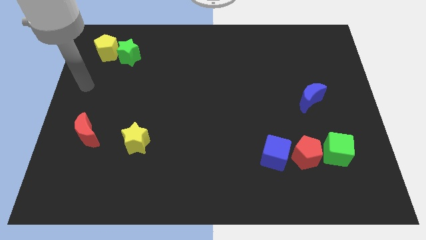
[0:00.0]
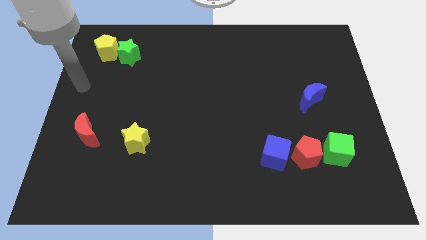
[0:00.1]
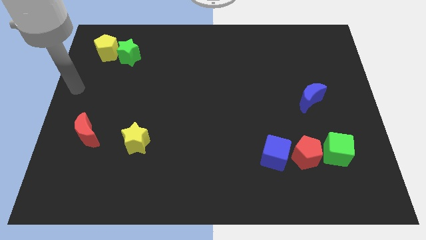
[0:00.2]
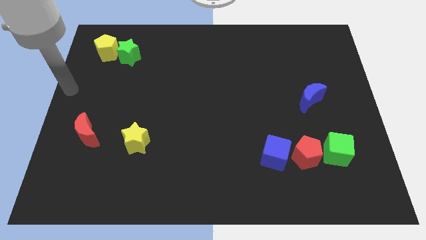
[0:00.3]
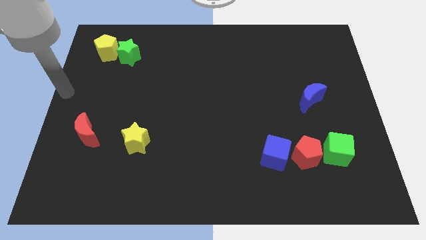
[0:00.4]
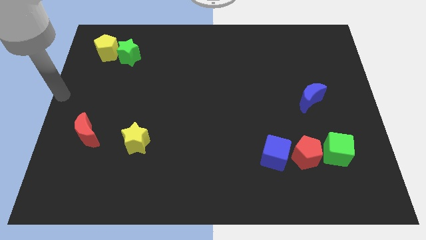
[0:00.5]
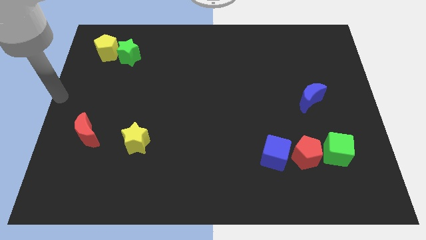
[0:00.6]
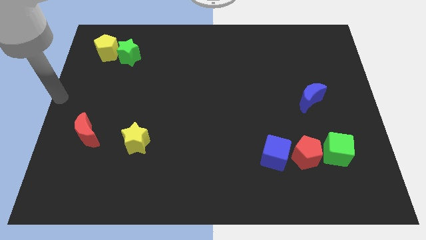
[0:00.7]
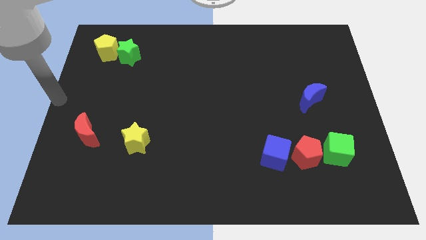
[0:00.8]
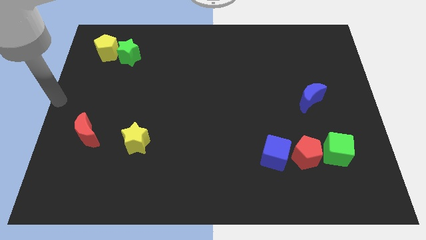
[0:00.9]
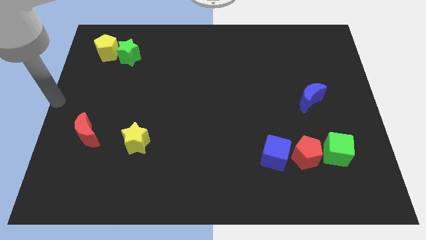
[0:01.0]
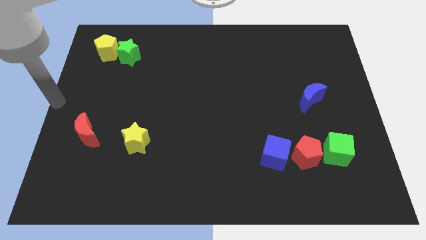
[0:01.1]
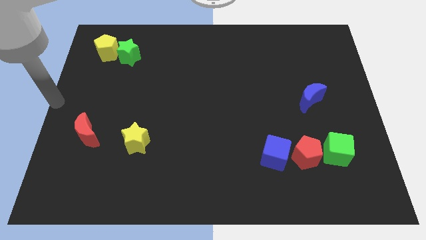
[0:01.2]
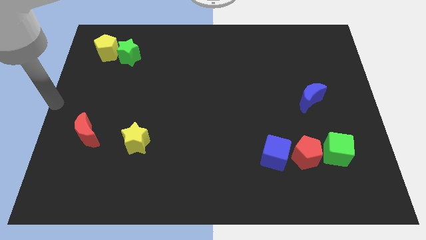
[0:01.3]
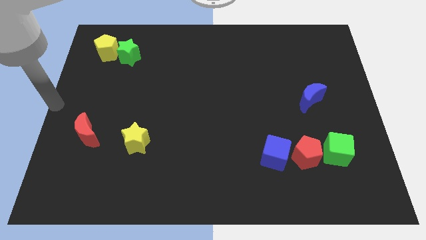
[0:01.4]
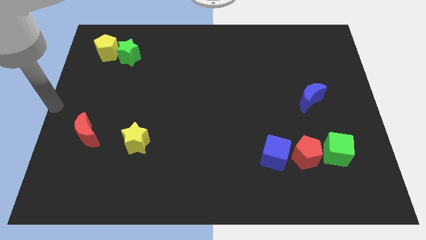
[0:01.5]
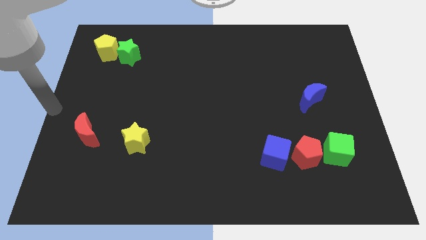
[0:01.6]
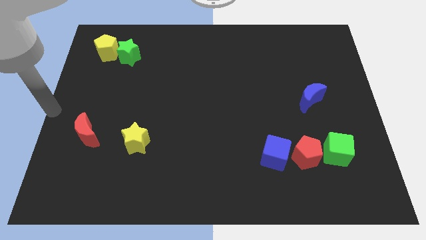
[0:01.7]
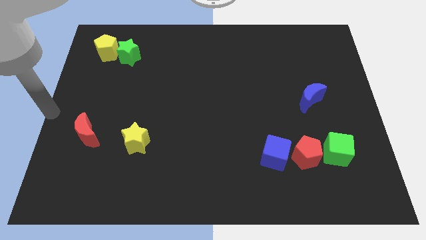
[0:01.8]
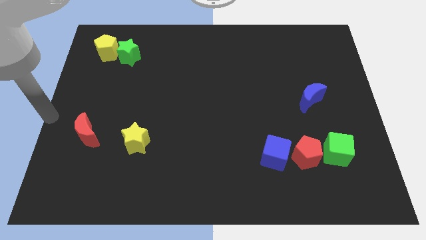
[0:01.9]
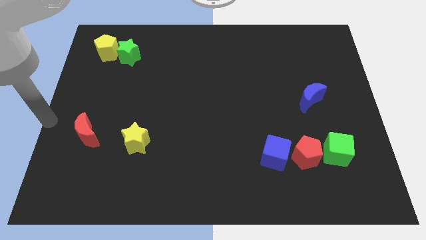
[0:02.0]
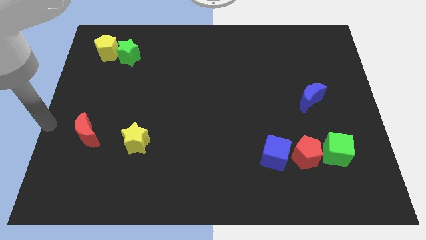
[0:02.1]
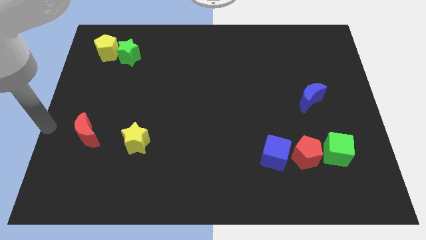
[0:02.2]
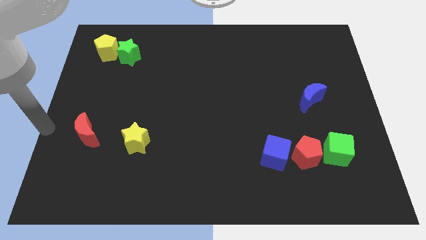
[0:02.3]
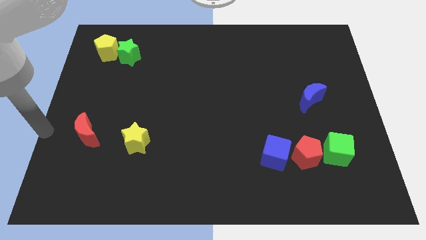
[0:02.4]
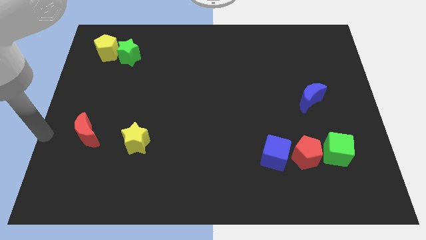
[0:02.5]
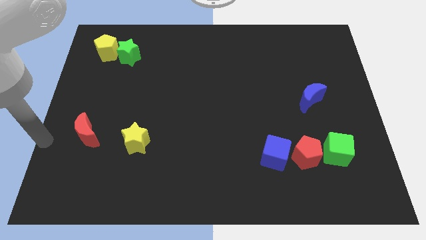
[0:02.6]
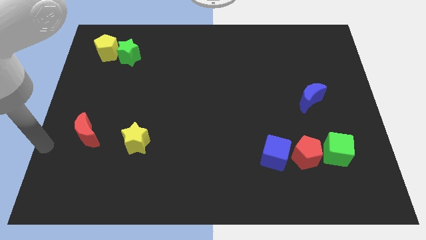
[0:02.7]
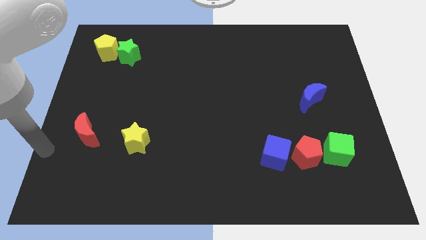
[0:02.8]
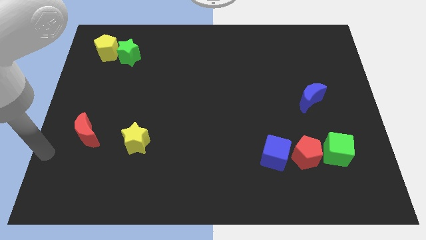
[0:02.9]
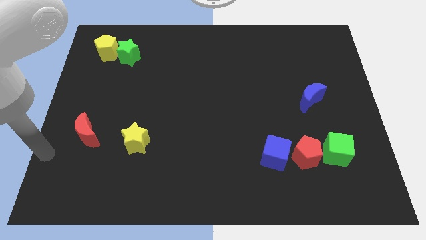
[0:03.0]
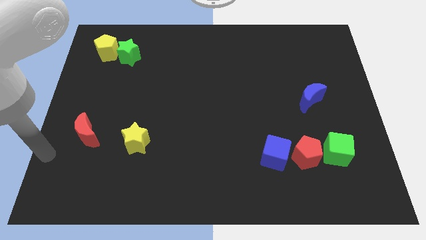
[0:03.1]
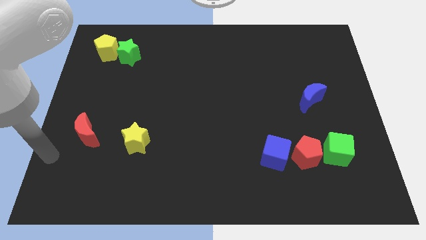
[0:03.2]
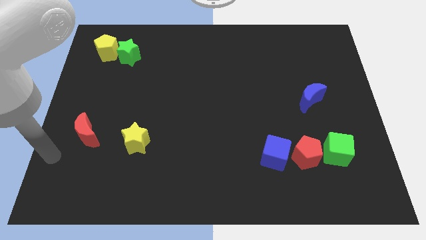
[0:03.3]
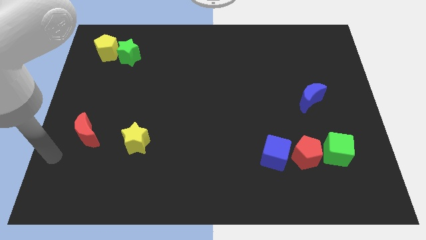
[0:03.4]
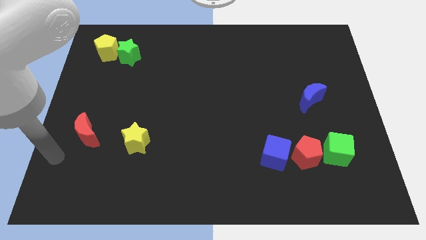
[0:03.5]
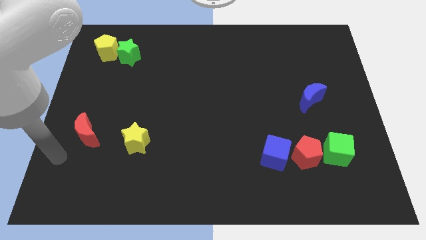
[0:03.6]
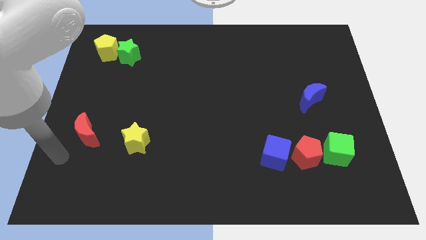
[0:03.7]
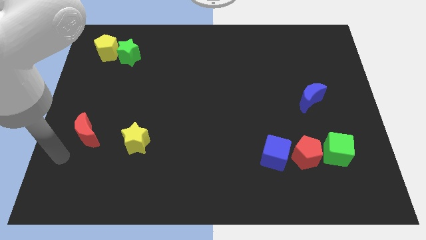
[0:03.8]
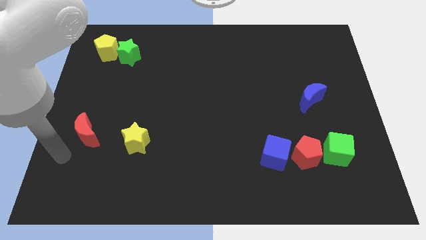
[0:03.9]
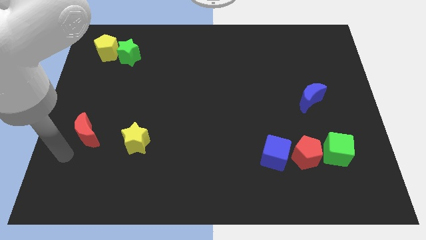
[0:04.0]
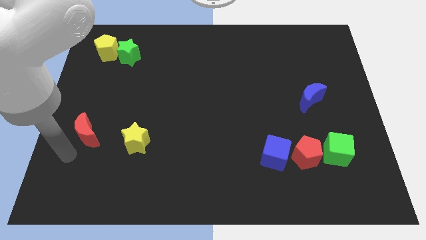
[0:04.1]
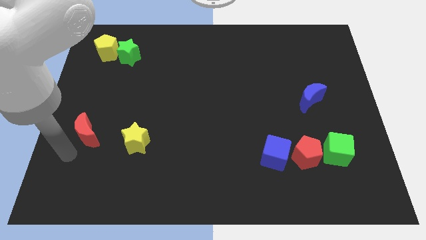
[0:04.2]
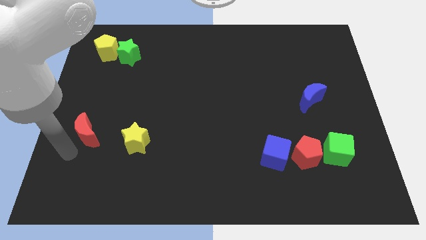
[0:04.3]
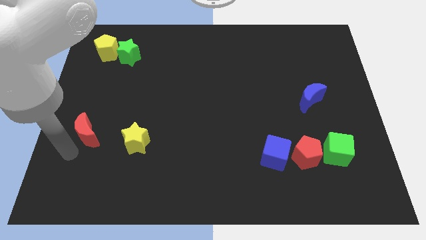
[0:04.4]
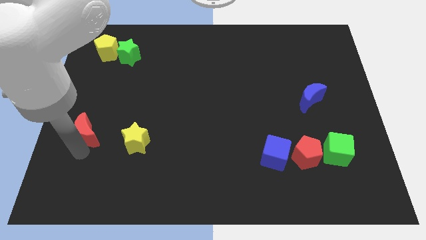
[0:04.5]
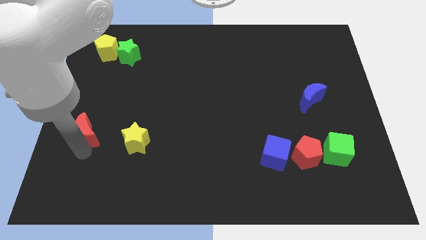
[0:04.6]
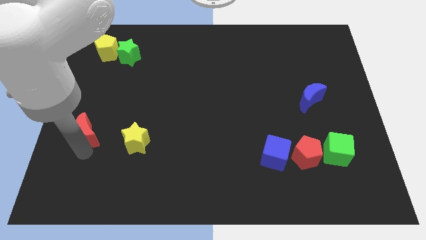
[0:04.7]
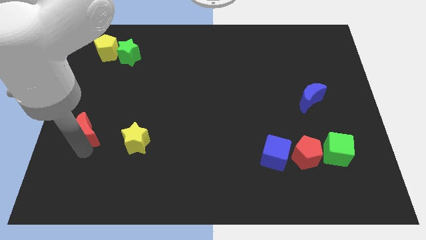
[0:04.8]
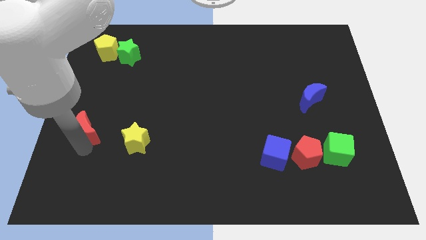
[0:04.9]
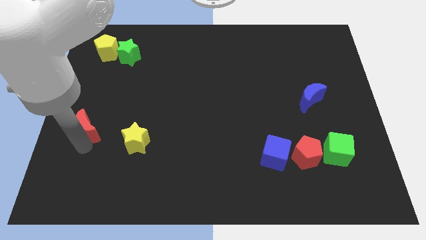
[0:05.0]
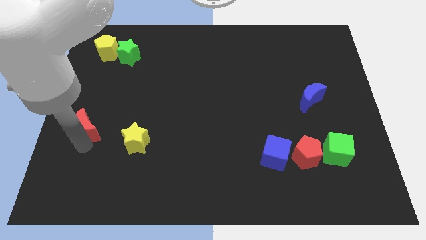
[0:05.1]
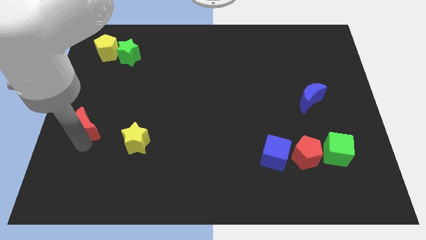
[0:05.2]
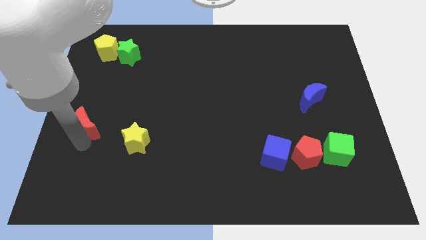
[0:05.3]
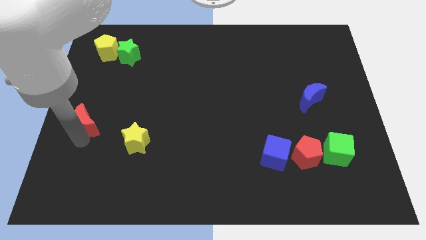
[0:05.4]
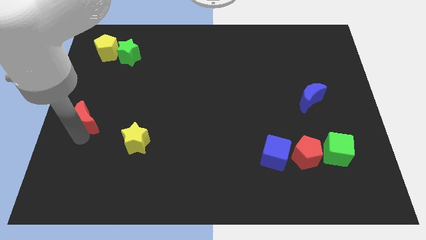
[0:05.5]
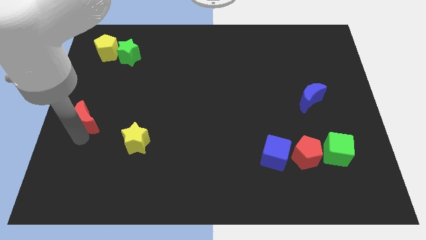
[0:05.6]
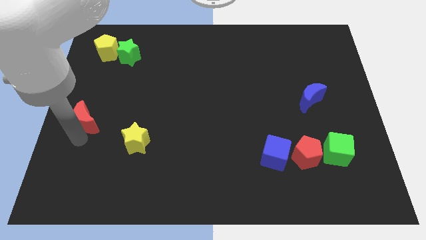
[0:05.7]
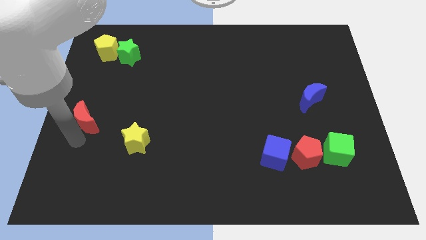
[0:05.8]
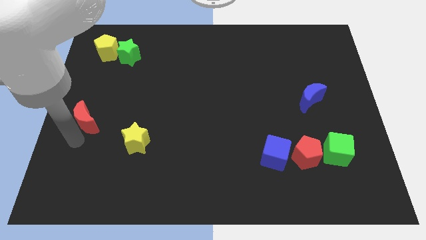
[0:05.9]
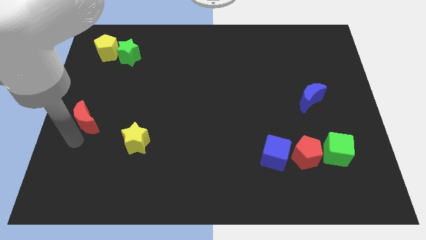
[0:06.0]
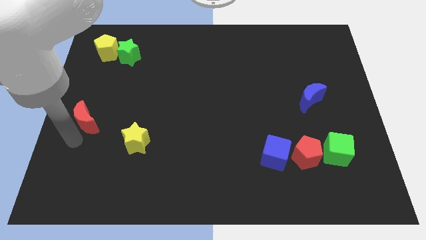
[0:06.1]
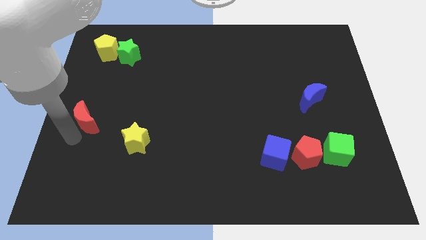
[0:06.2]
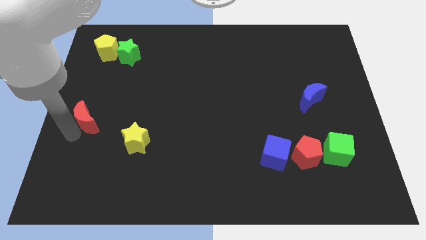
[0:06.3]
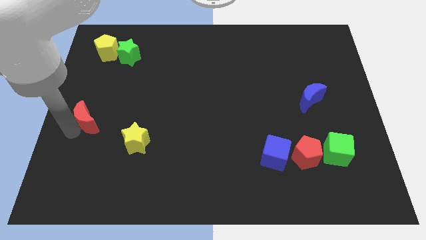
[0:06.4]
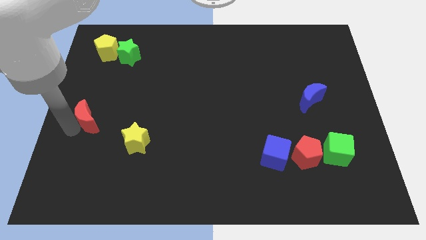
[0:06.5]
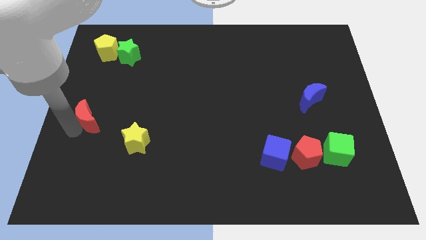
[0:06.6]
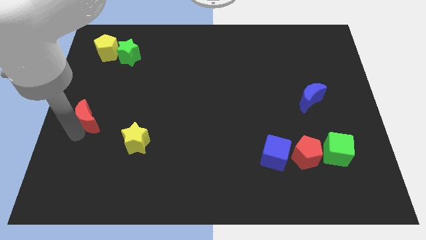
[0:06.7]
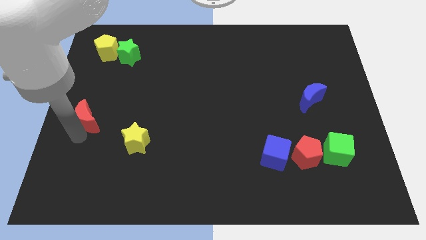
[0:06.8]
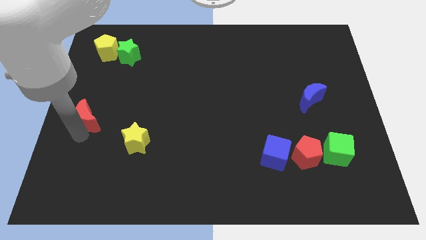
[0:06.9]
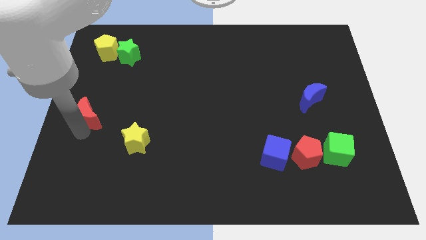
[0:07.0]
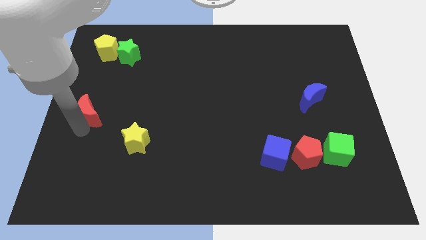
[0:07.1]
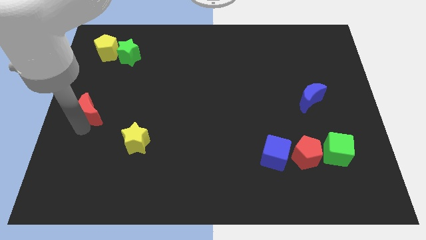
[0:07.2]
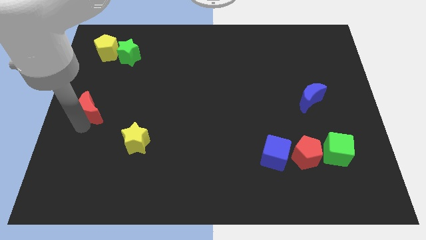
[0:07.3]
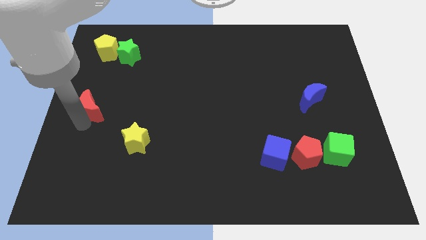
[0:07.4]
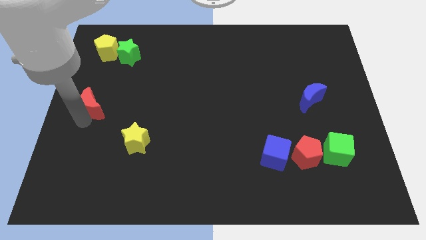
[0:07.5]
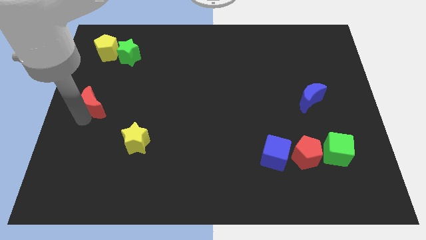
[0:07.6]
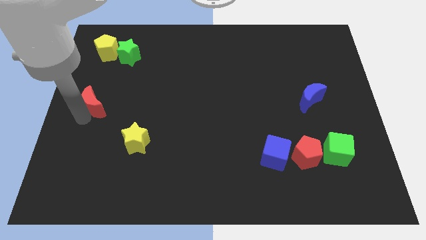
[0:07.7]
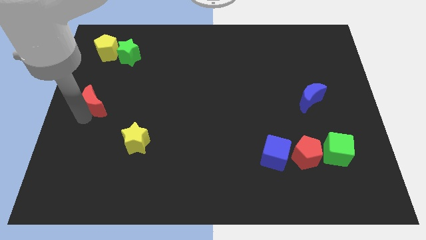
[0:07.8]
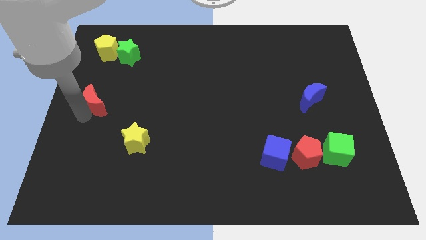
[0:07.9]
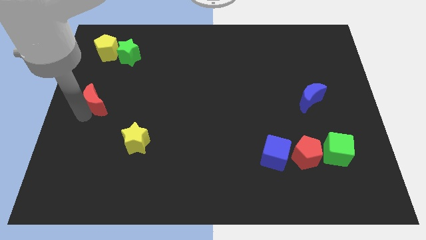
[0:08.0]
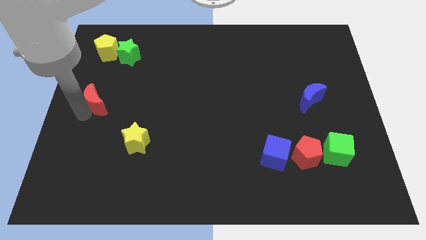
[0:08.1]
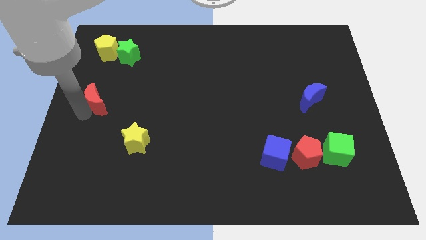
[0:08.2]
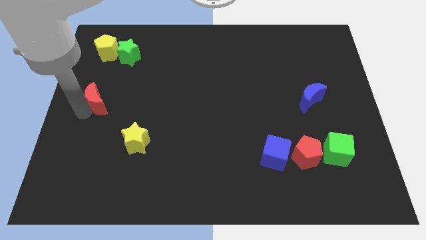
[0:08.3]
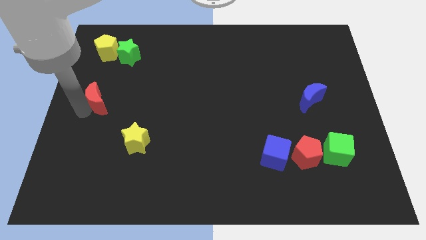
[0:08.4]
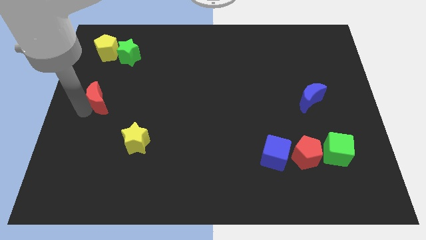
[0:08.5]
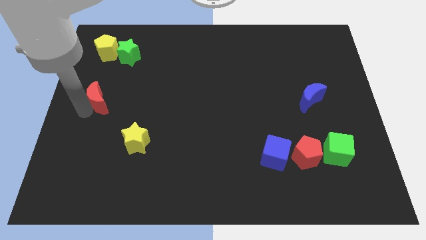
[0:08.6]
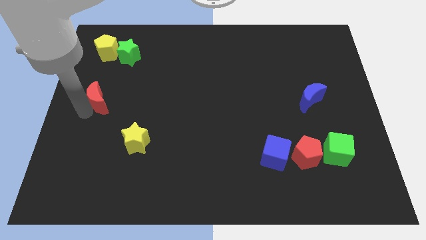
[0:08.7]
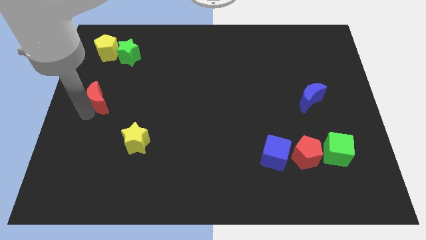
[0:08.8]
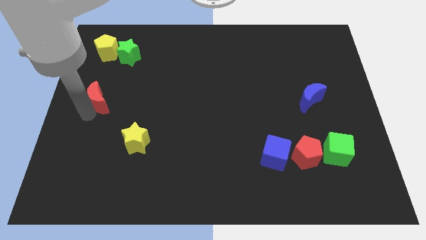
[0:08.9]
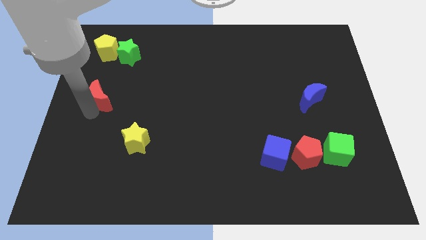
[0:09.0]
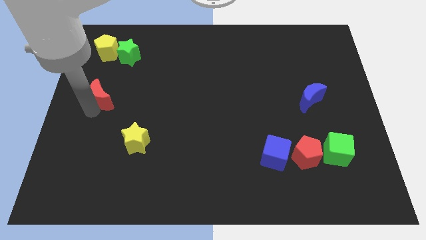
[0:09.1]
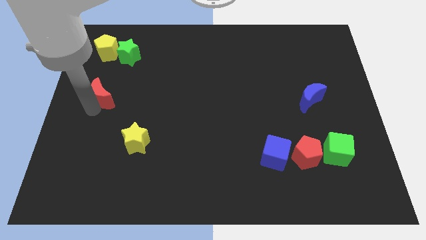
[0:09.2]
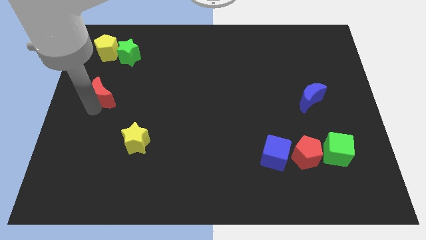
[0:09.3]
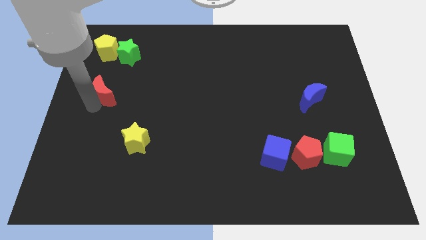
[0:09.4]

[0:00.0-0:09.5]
push the red moon upward
